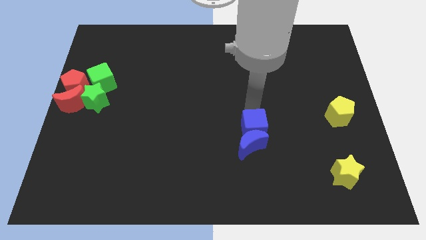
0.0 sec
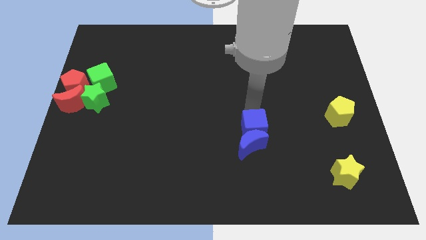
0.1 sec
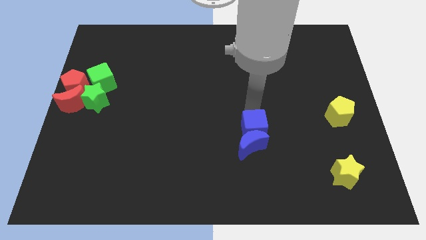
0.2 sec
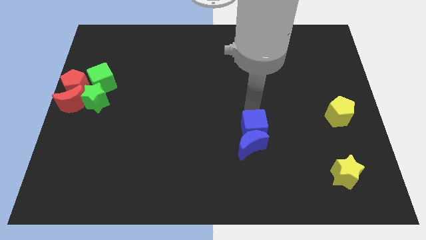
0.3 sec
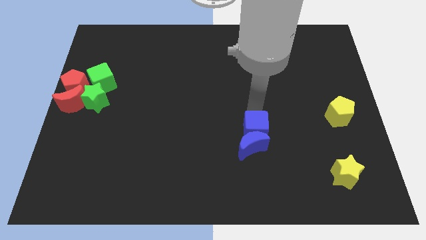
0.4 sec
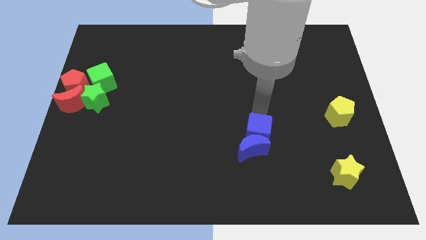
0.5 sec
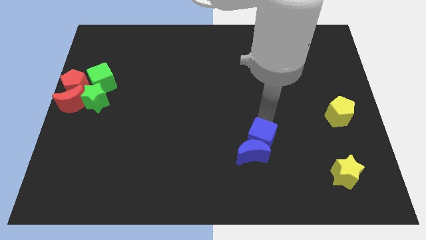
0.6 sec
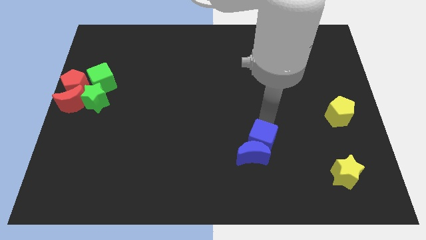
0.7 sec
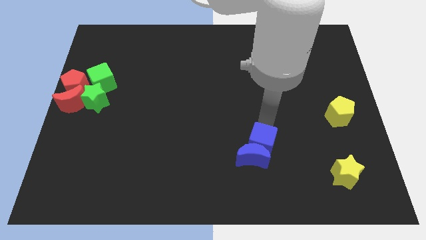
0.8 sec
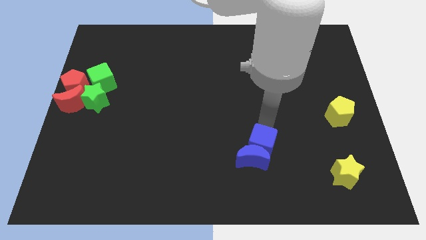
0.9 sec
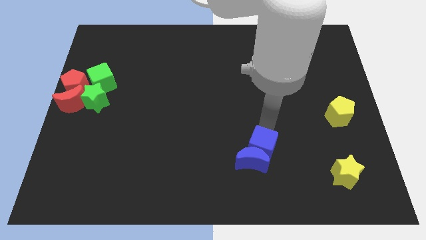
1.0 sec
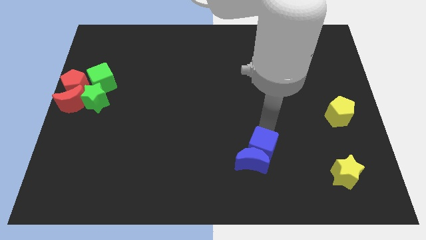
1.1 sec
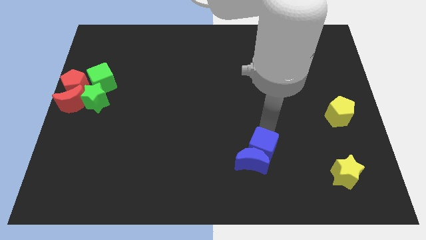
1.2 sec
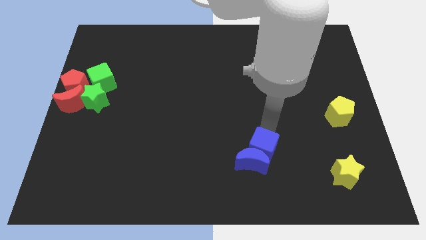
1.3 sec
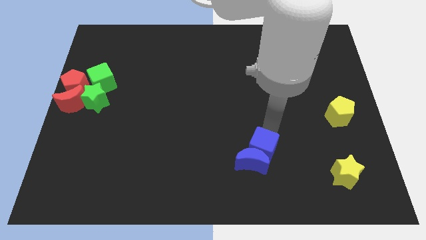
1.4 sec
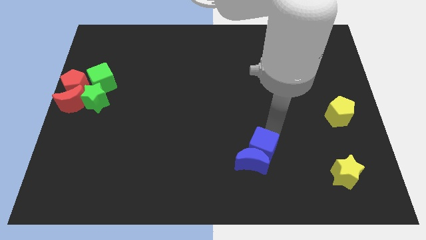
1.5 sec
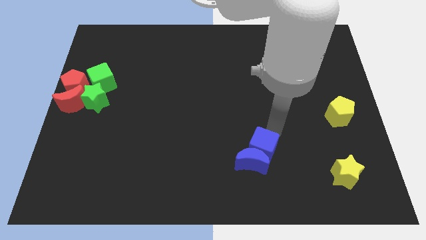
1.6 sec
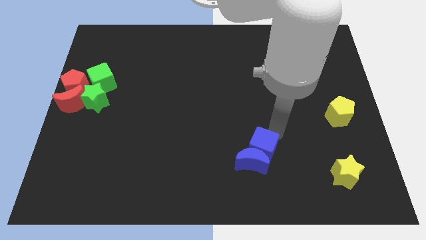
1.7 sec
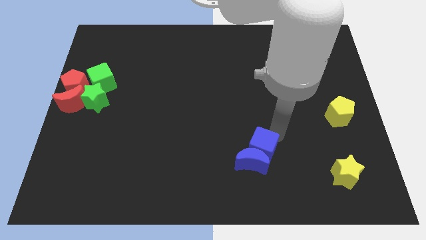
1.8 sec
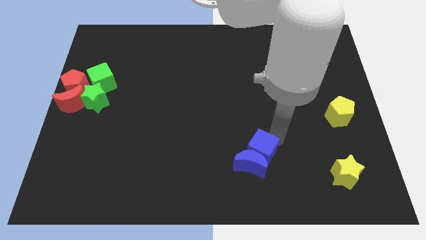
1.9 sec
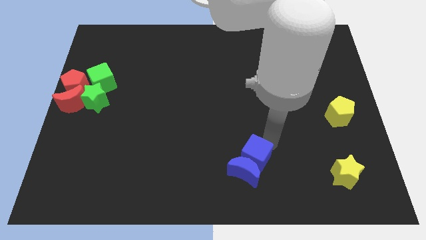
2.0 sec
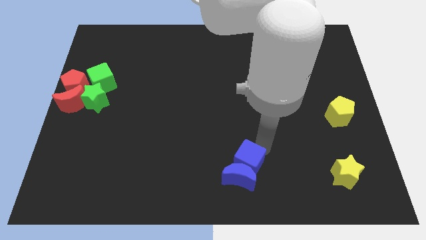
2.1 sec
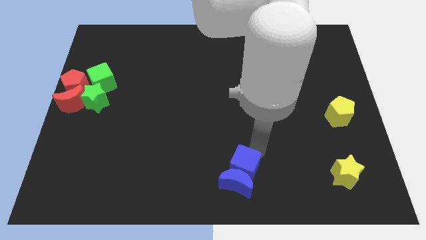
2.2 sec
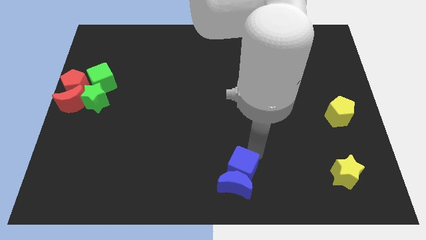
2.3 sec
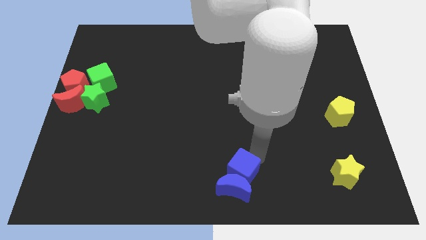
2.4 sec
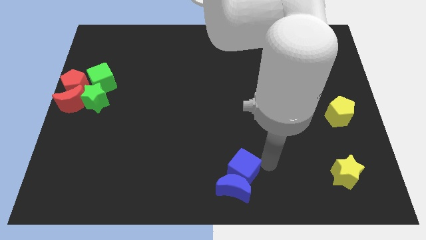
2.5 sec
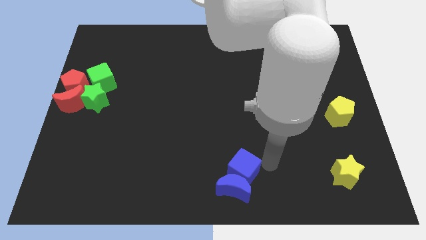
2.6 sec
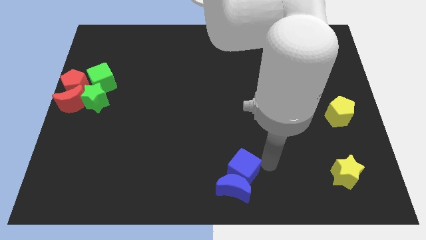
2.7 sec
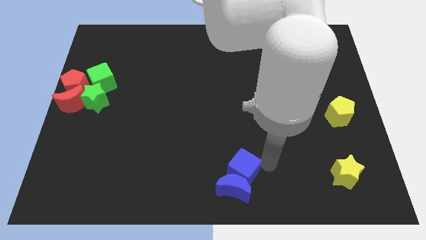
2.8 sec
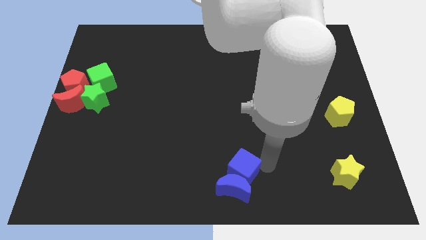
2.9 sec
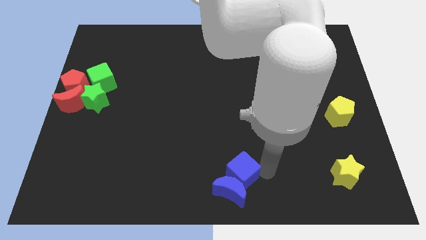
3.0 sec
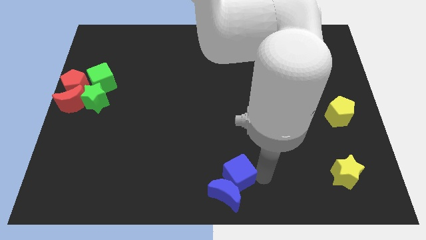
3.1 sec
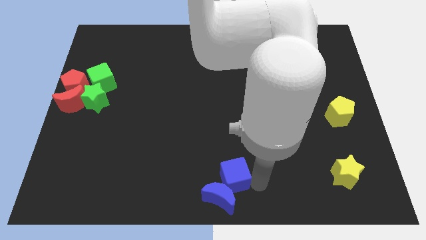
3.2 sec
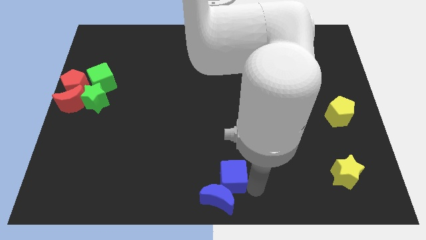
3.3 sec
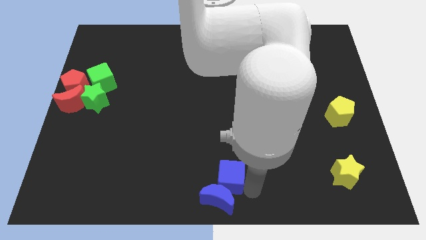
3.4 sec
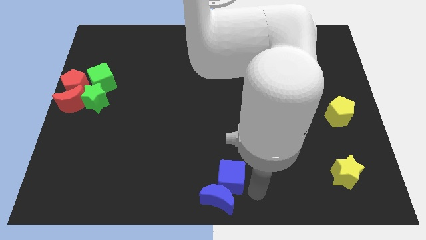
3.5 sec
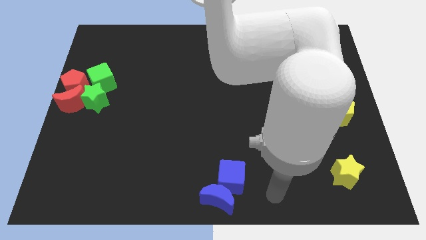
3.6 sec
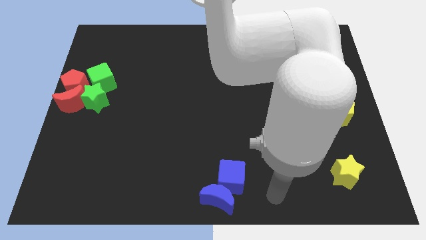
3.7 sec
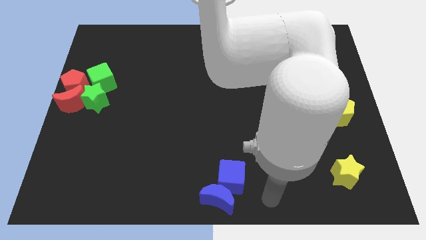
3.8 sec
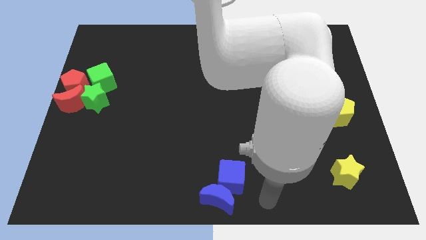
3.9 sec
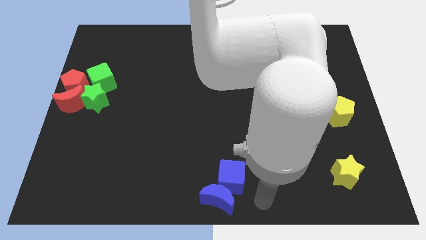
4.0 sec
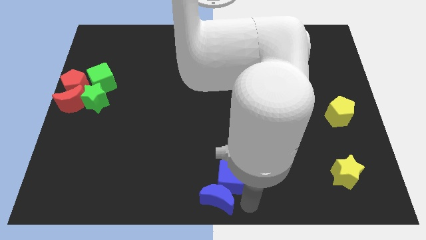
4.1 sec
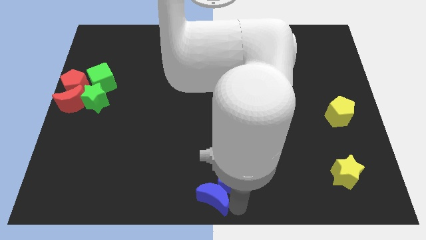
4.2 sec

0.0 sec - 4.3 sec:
move the blue blocks at the bottom center of the table

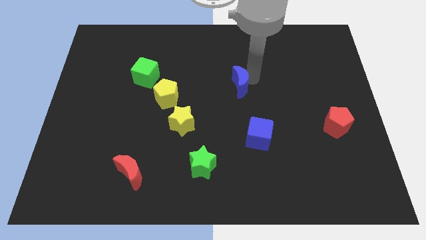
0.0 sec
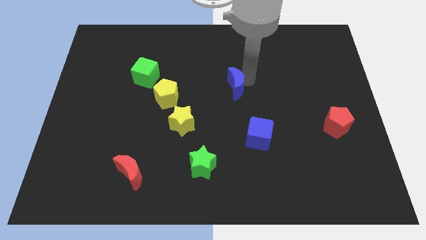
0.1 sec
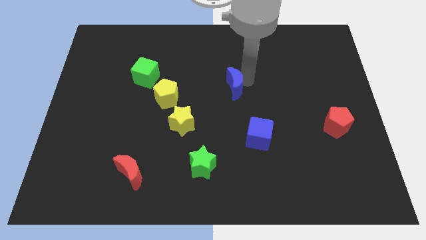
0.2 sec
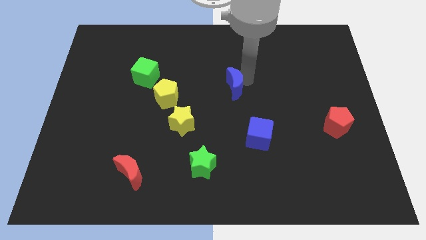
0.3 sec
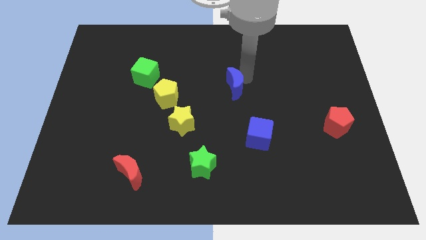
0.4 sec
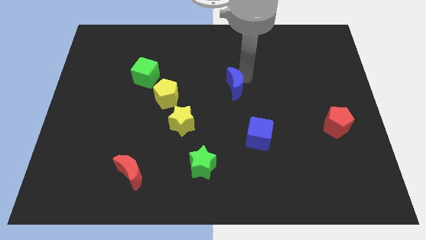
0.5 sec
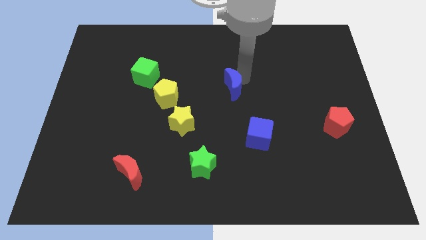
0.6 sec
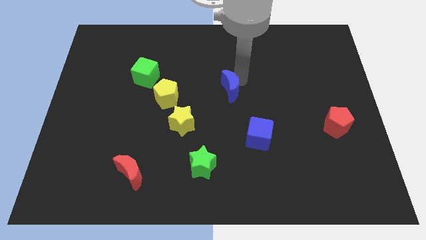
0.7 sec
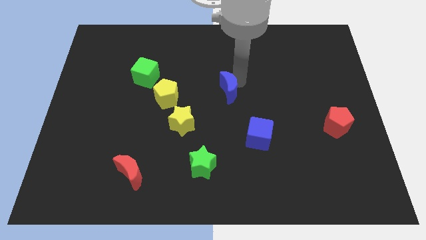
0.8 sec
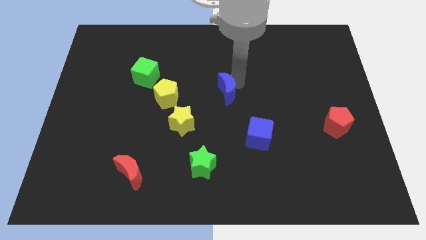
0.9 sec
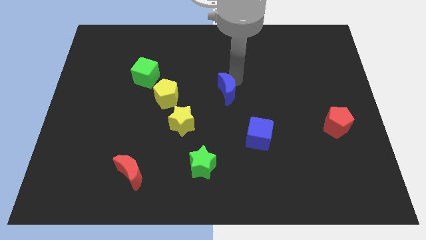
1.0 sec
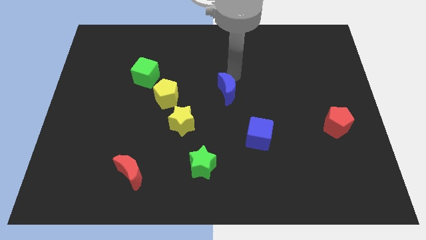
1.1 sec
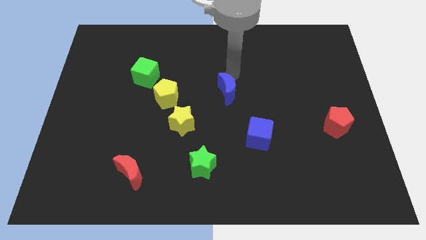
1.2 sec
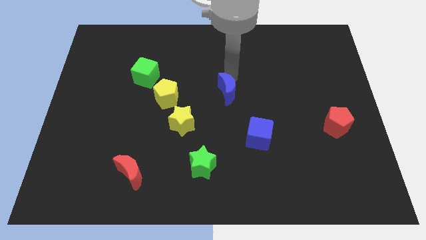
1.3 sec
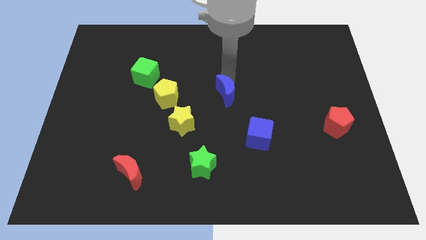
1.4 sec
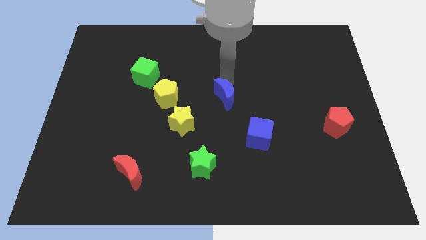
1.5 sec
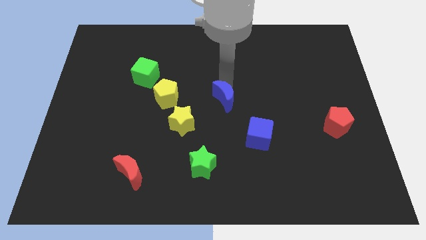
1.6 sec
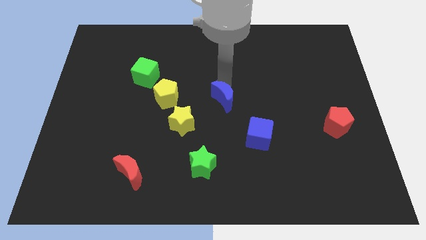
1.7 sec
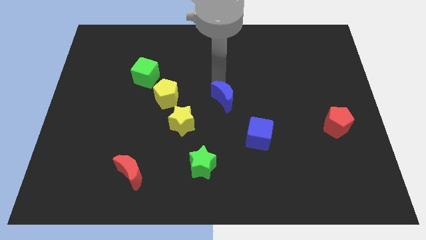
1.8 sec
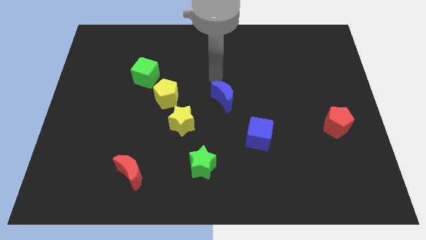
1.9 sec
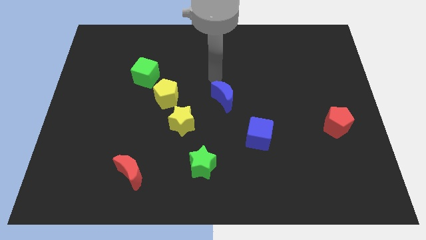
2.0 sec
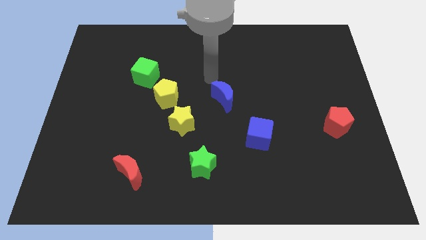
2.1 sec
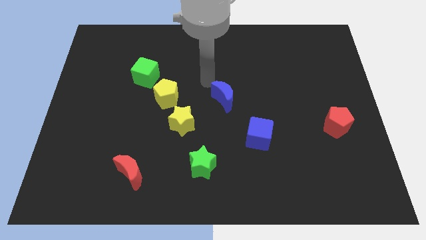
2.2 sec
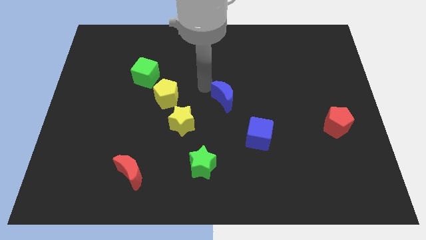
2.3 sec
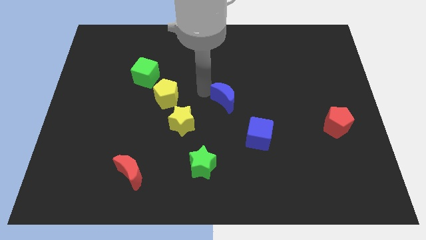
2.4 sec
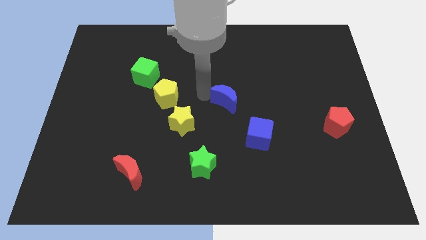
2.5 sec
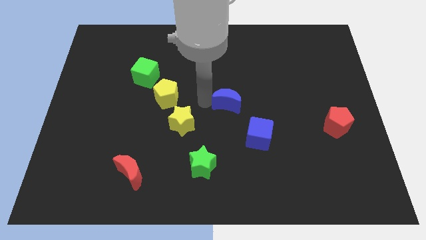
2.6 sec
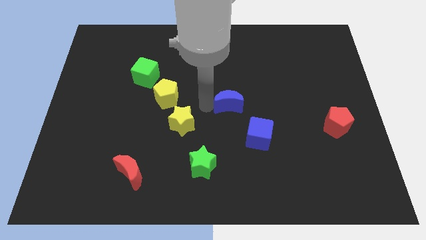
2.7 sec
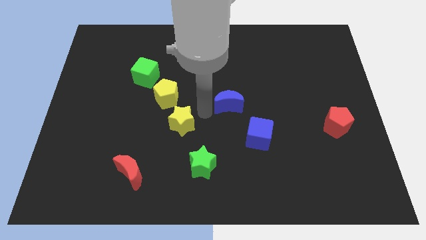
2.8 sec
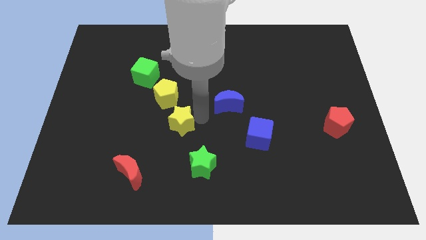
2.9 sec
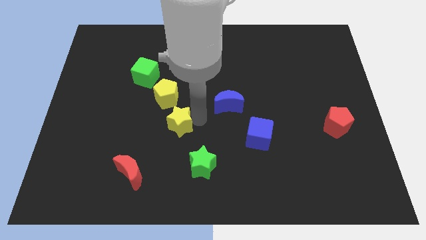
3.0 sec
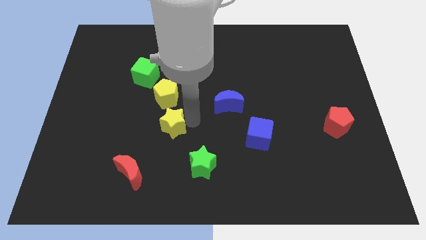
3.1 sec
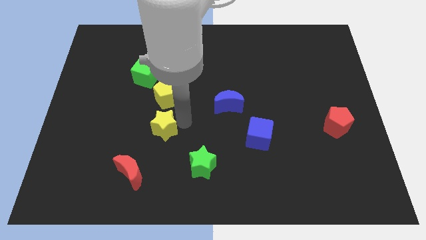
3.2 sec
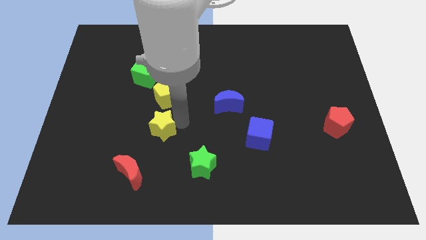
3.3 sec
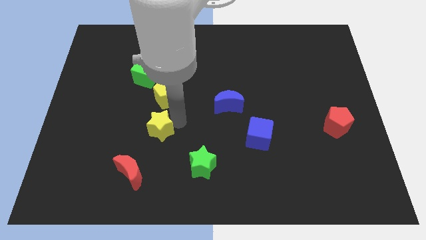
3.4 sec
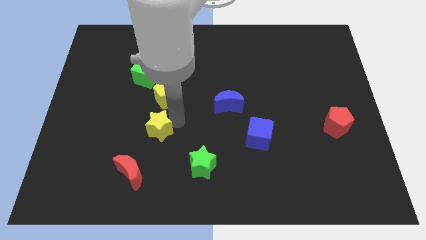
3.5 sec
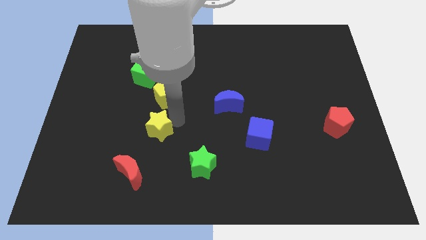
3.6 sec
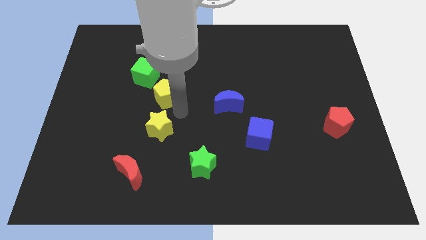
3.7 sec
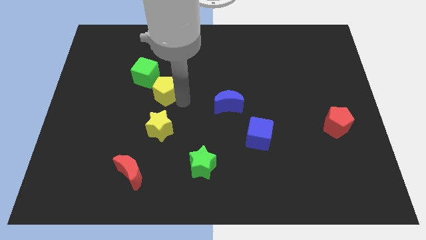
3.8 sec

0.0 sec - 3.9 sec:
place the green star to the top left side of the green star

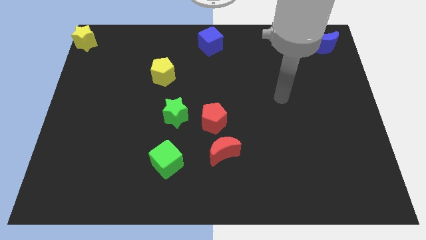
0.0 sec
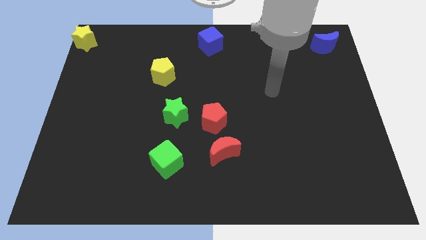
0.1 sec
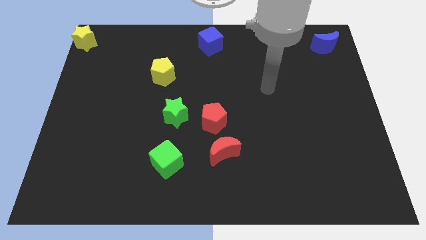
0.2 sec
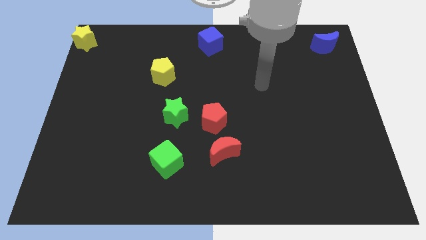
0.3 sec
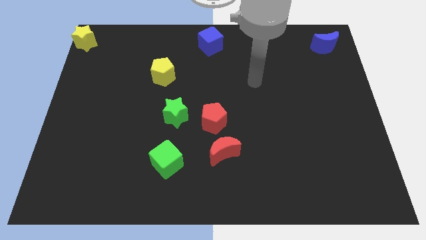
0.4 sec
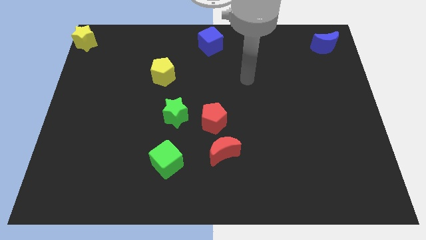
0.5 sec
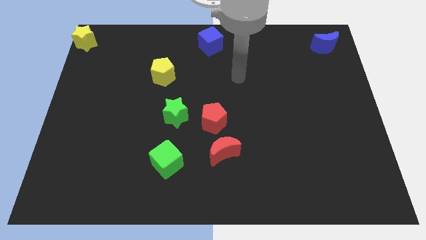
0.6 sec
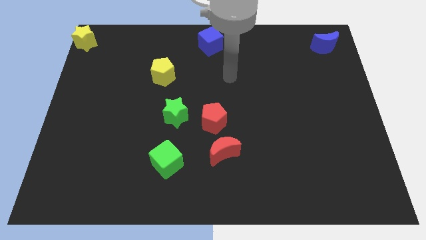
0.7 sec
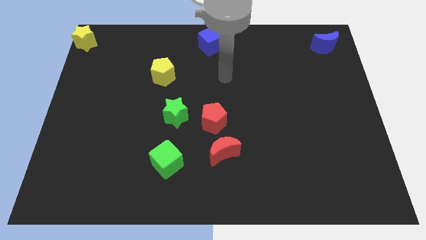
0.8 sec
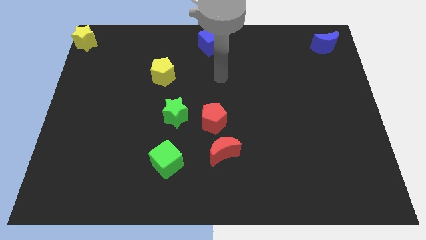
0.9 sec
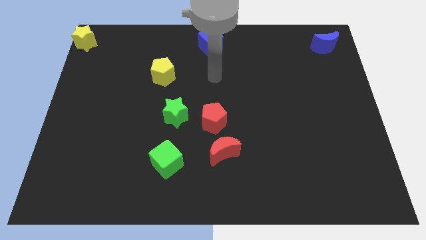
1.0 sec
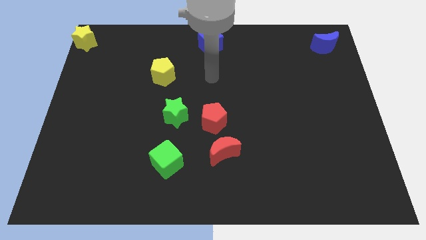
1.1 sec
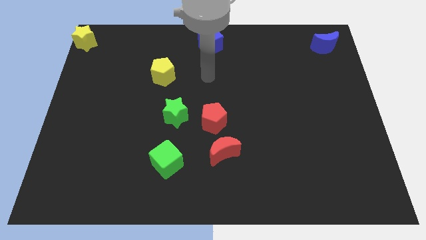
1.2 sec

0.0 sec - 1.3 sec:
place your hand in between the blue cube and the red pentagon
